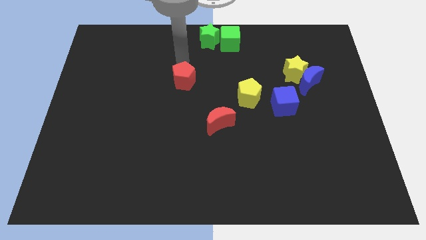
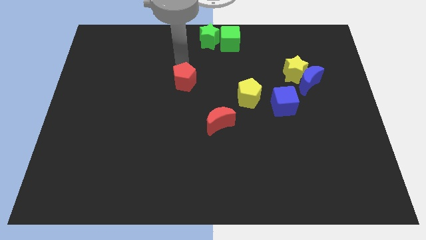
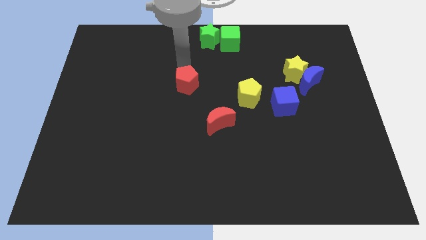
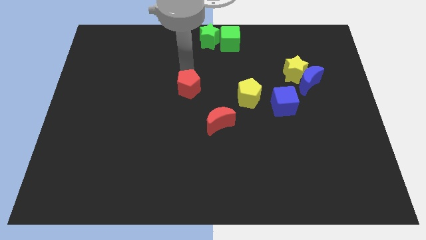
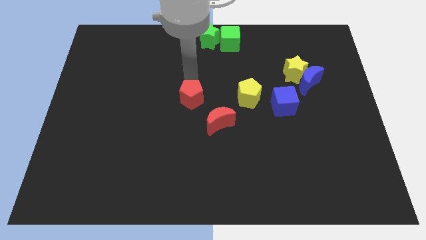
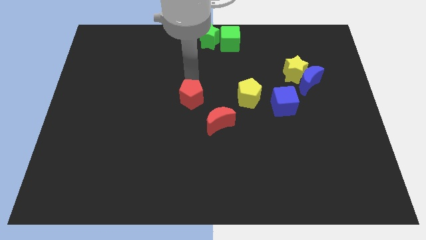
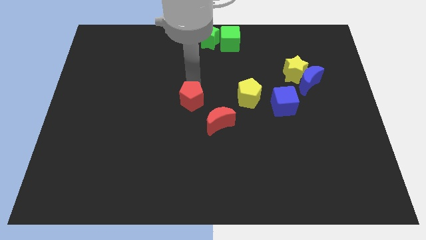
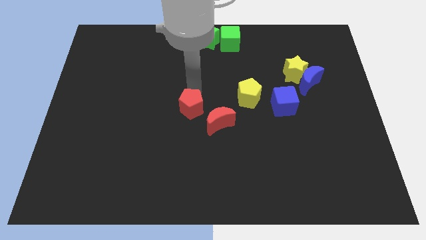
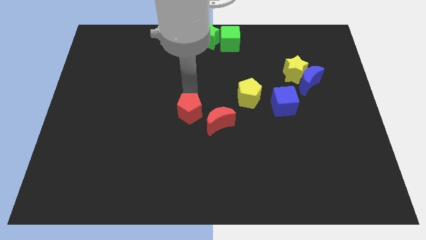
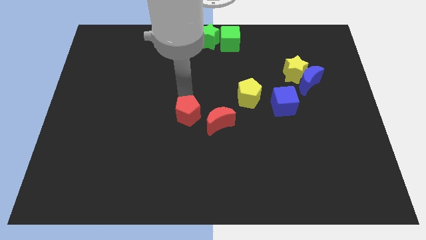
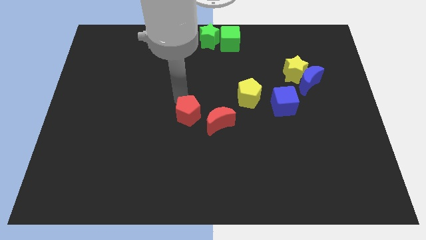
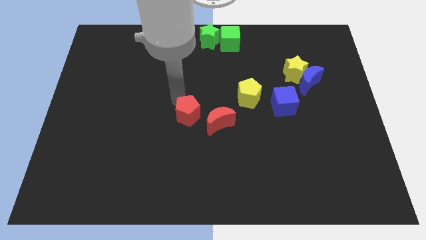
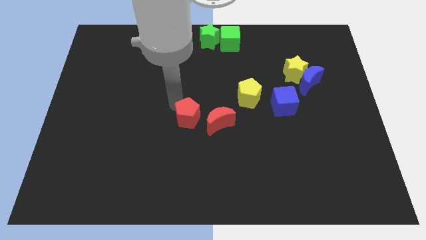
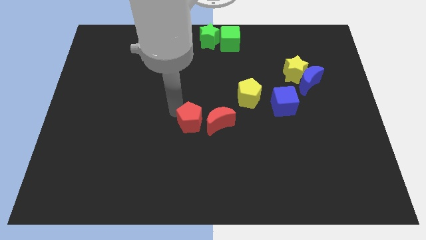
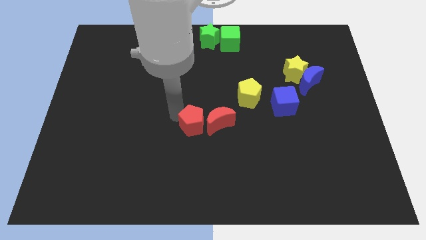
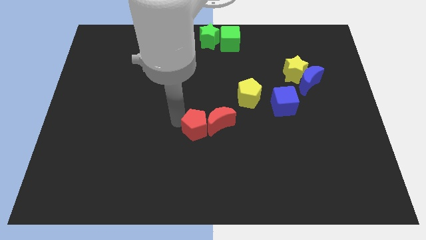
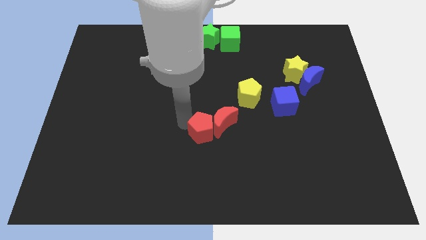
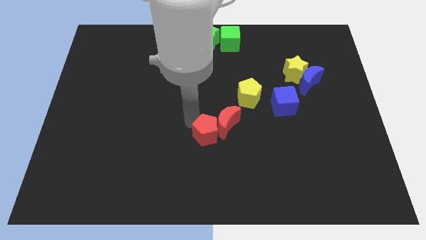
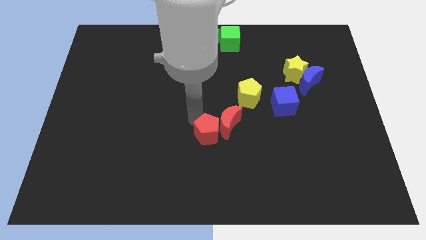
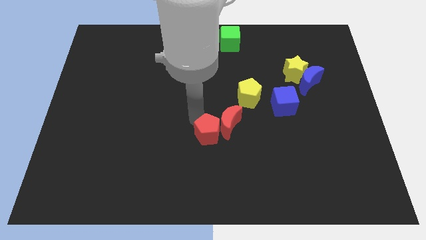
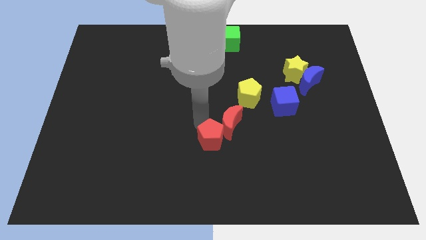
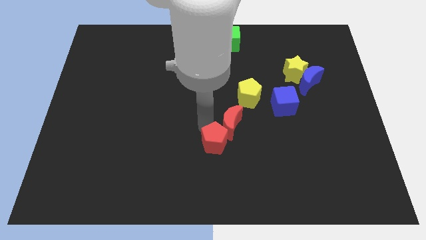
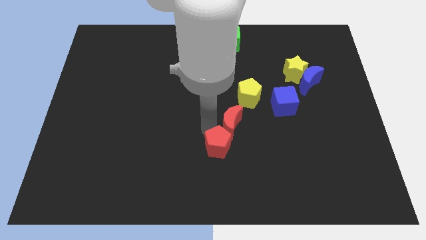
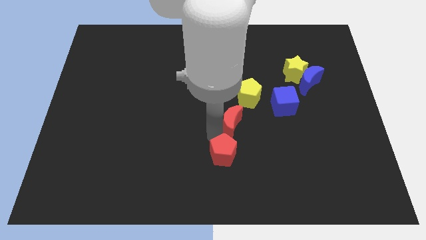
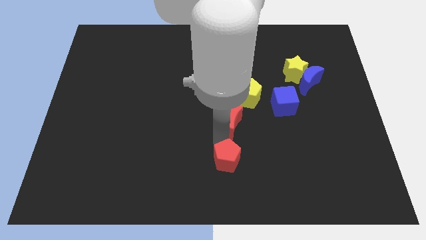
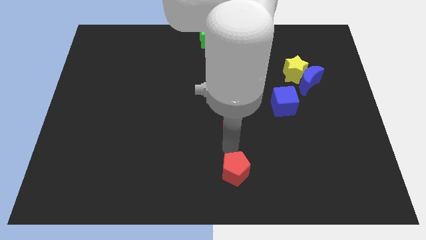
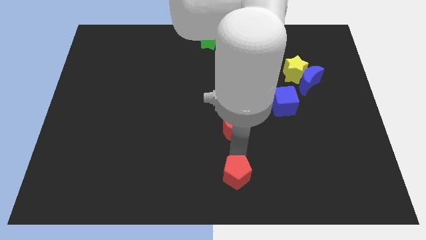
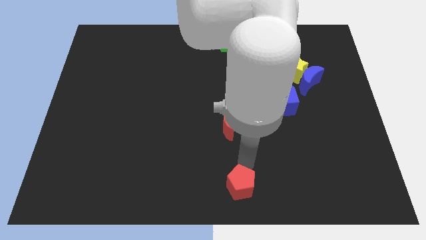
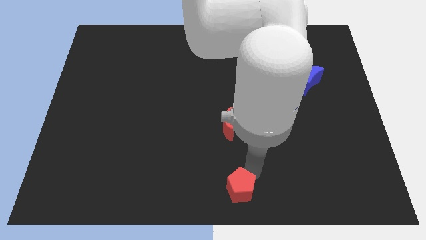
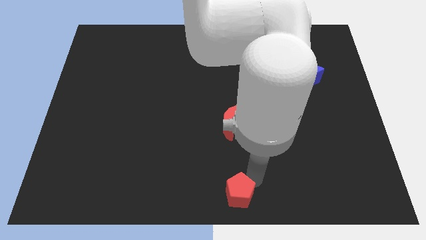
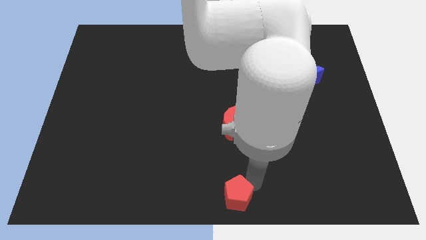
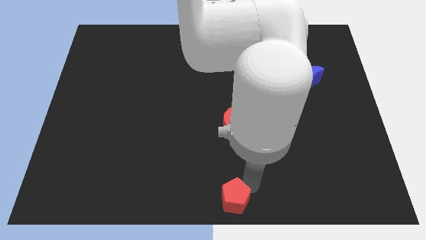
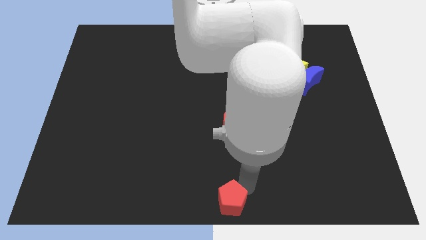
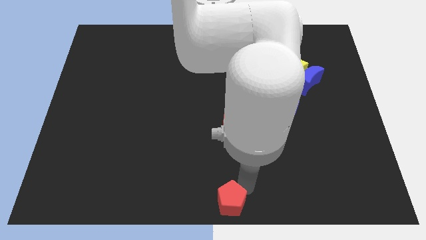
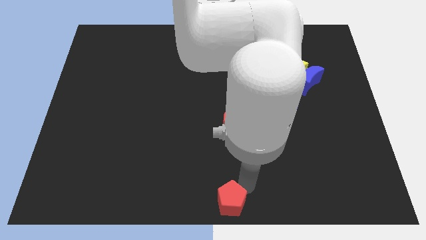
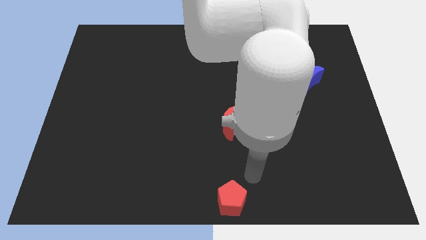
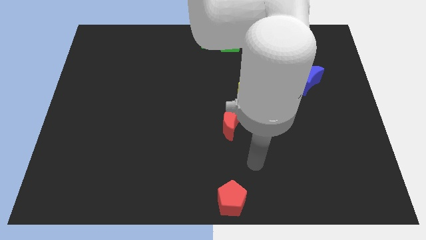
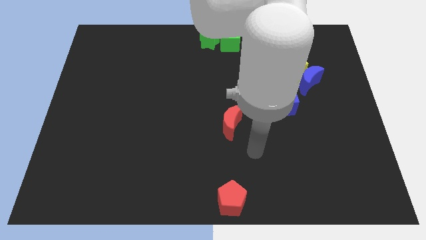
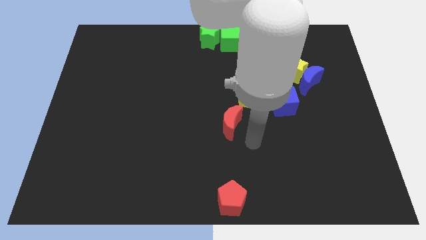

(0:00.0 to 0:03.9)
move red pentagon to the bottom center of the board

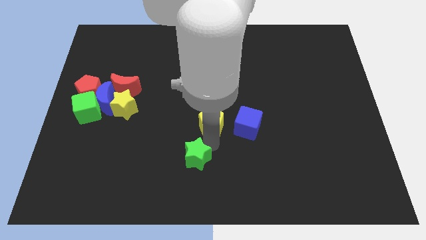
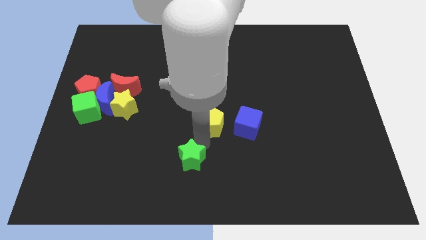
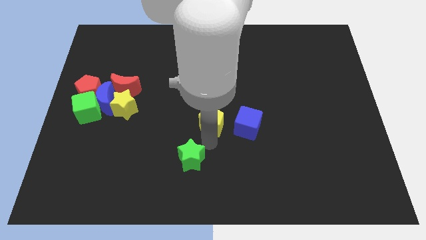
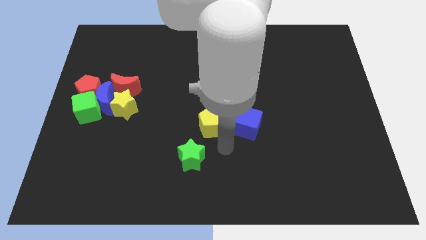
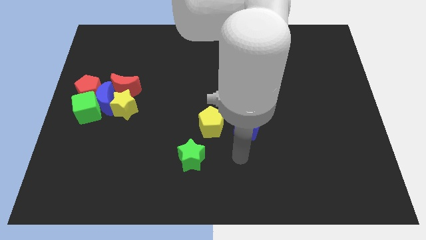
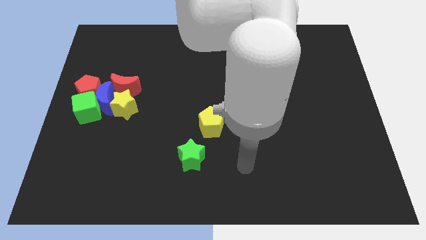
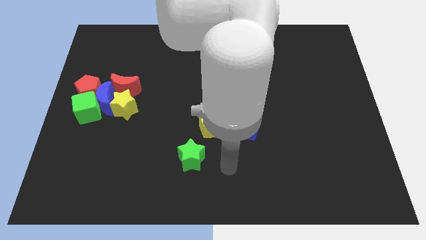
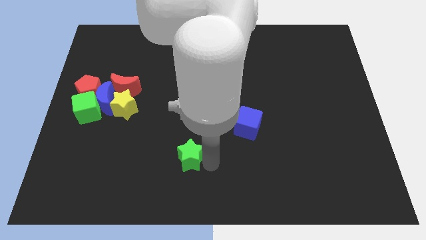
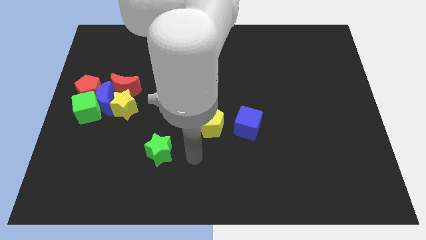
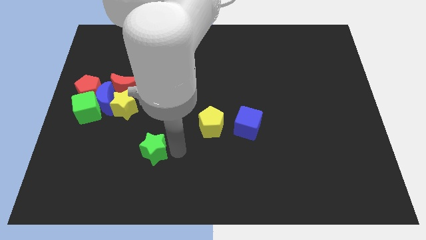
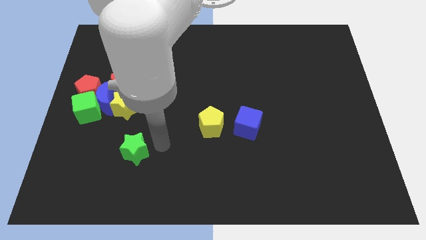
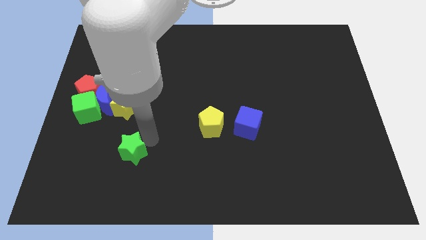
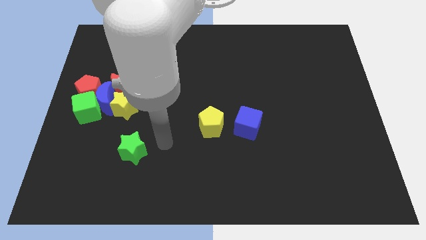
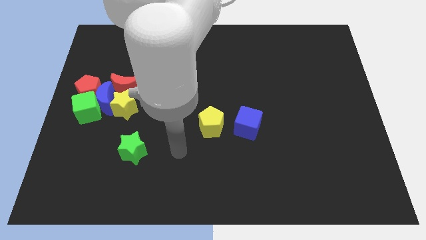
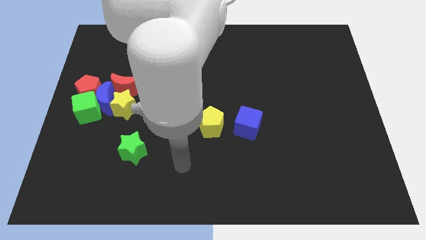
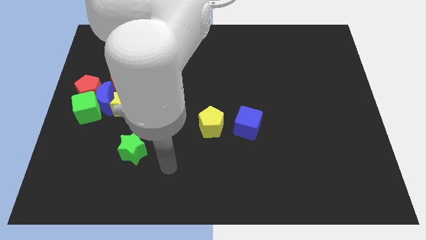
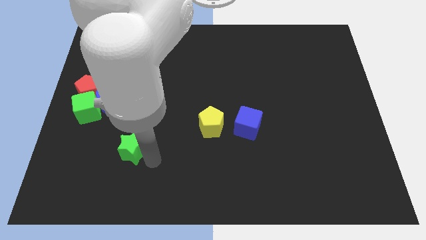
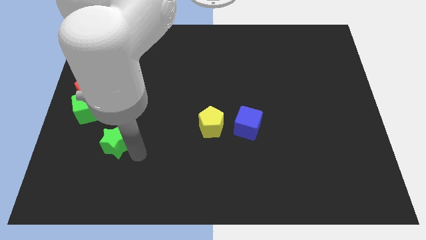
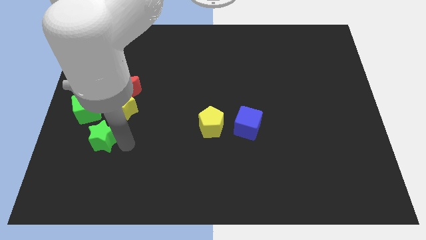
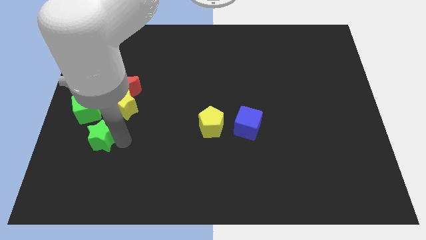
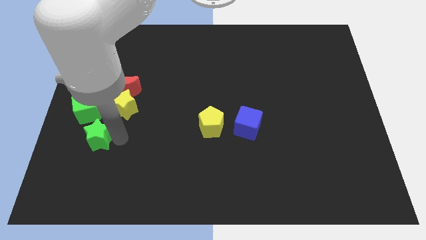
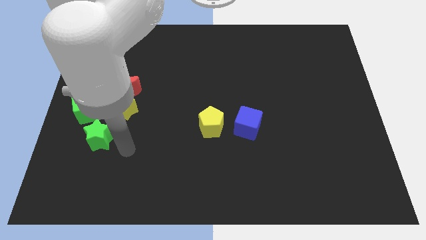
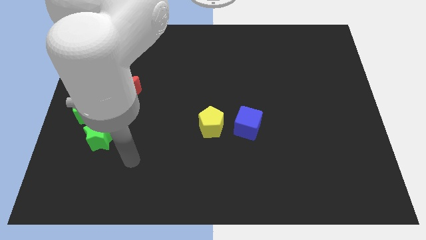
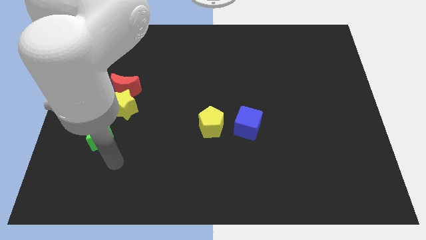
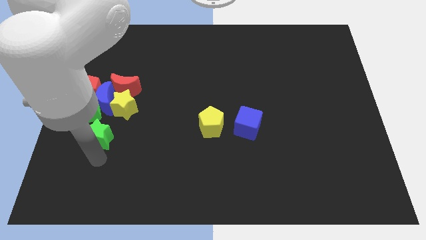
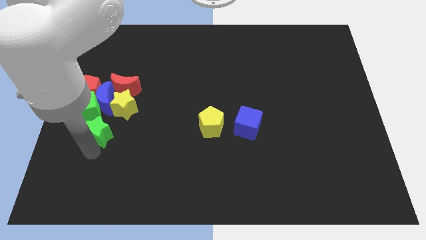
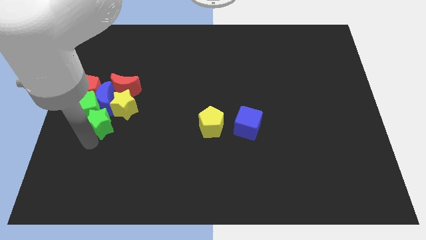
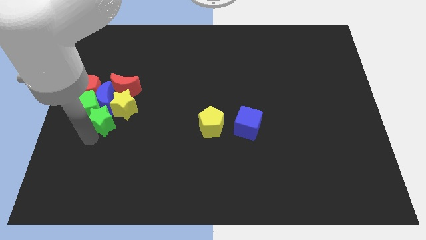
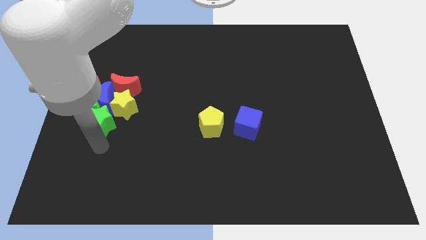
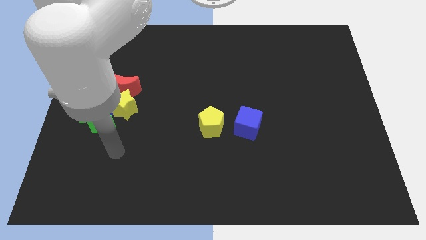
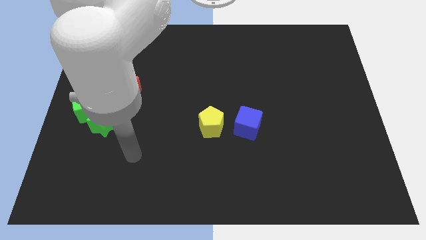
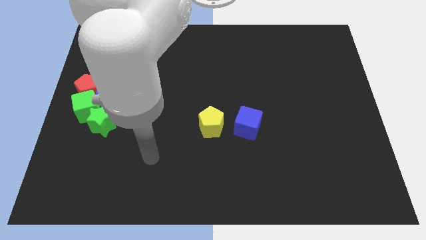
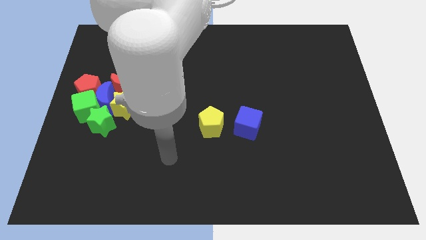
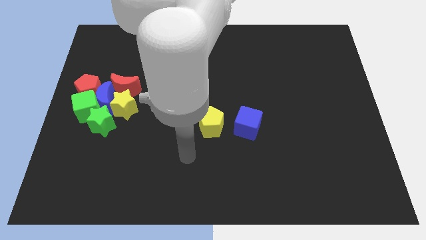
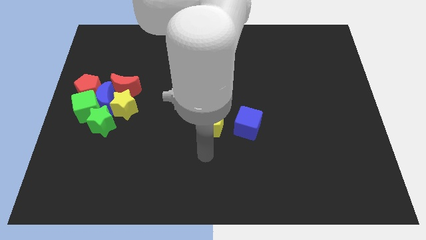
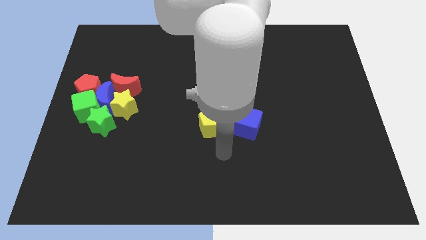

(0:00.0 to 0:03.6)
move the green star into the group of blocks

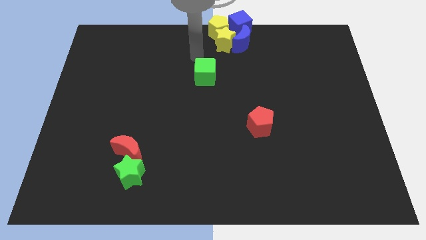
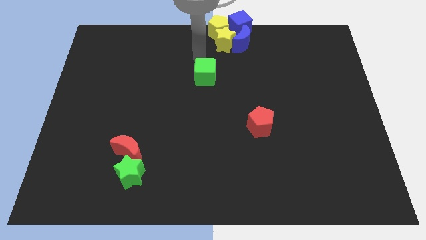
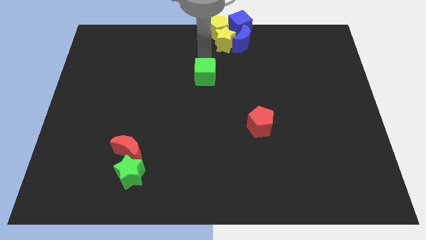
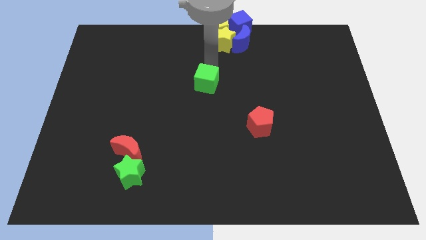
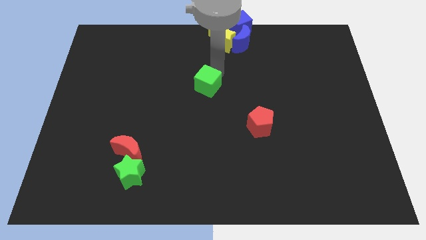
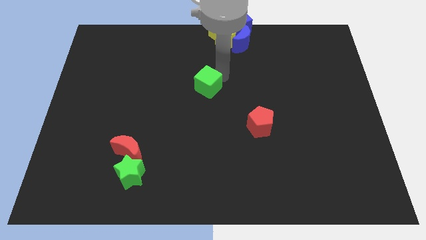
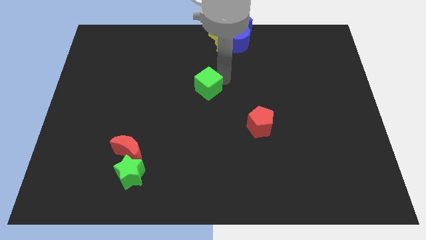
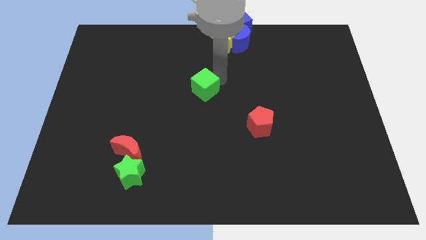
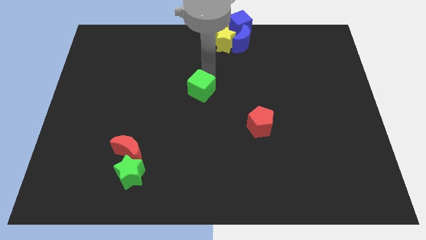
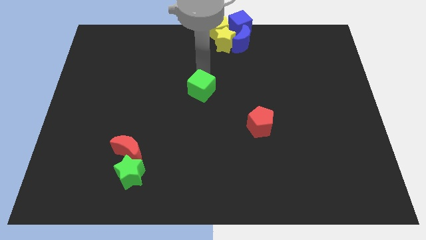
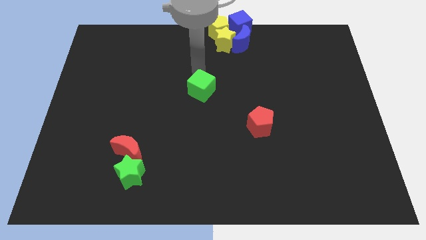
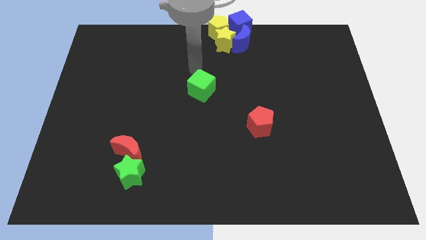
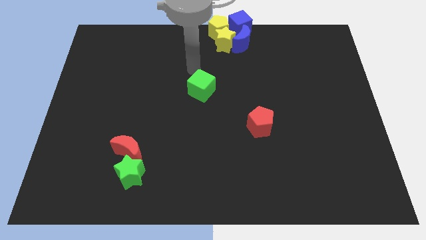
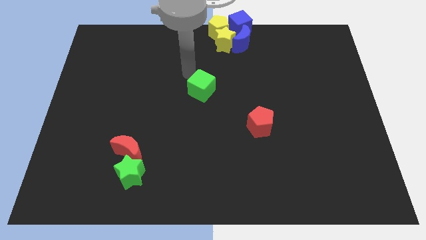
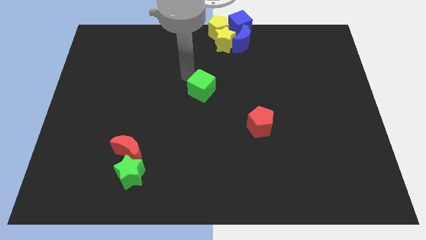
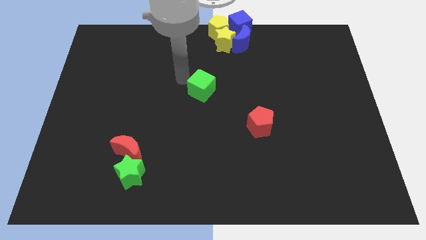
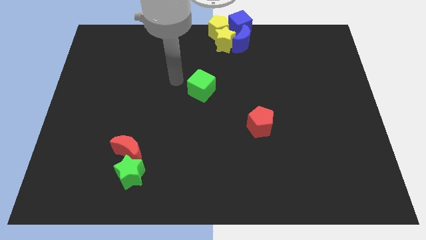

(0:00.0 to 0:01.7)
push the green cube towards the center of the board
